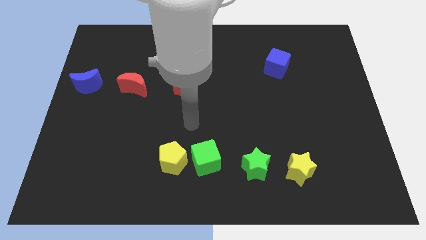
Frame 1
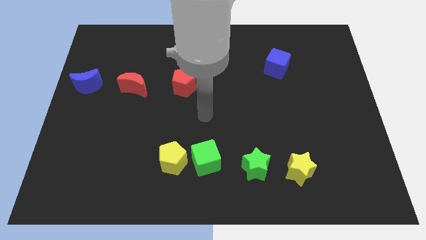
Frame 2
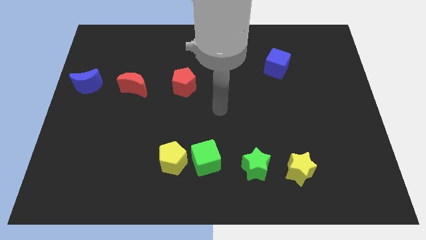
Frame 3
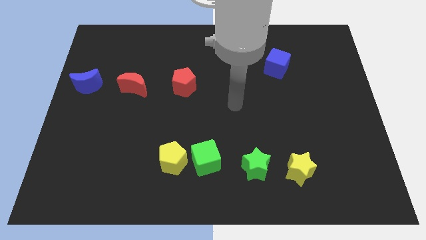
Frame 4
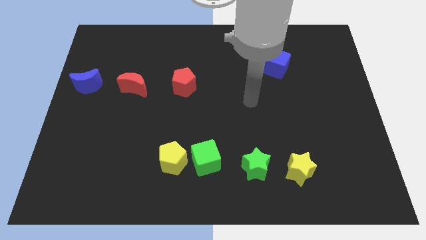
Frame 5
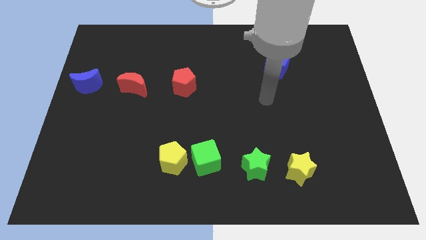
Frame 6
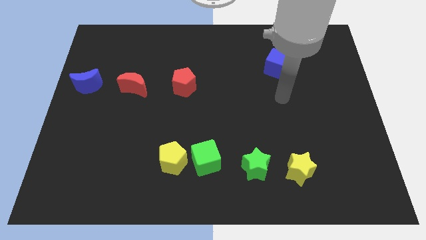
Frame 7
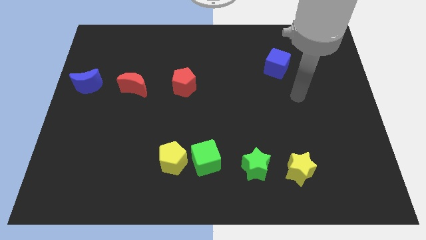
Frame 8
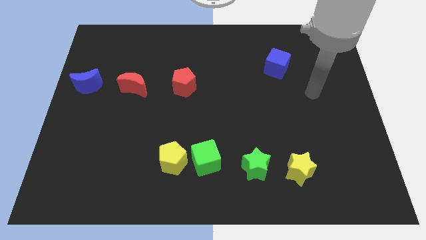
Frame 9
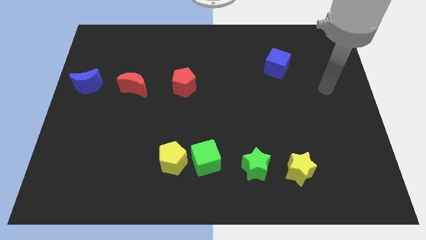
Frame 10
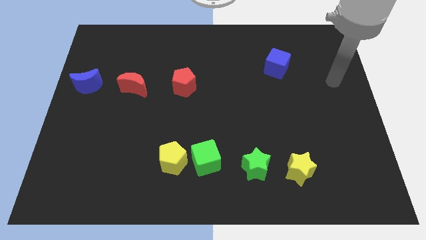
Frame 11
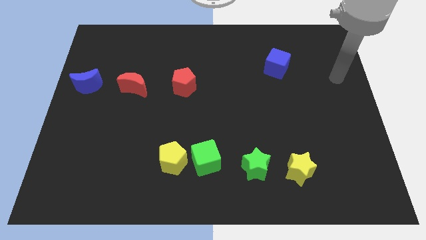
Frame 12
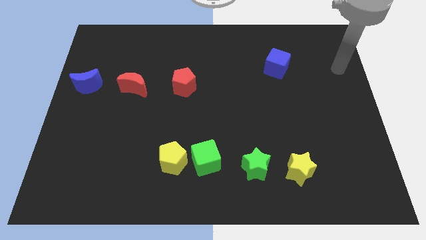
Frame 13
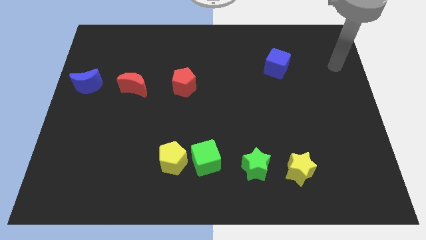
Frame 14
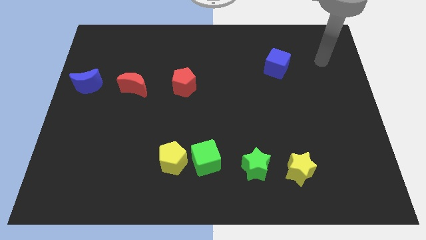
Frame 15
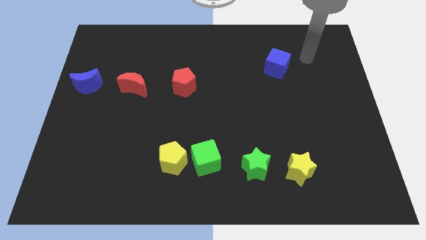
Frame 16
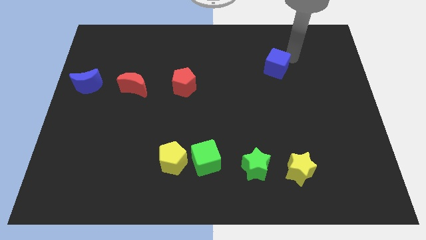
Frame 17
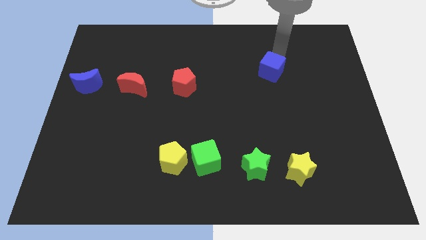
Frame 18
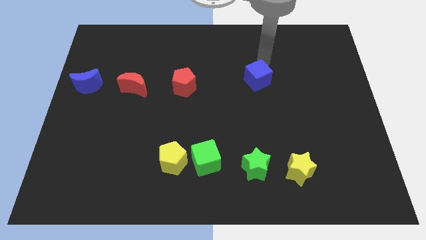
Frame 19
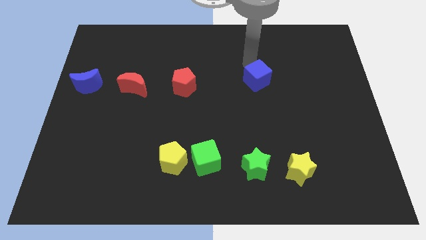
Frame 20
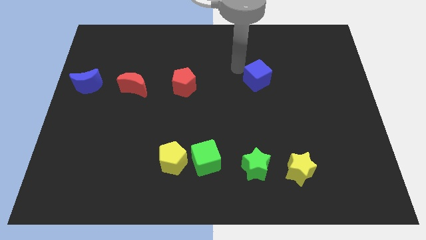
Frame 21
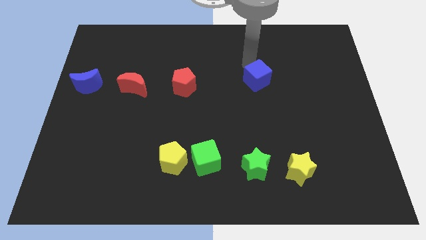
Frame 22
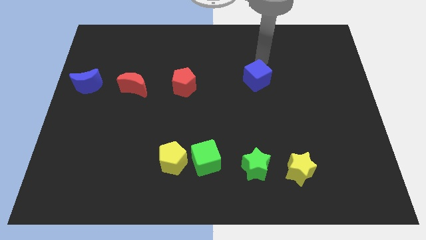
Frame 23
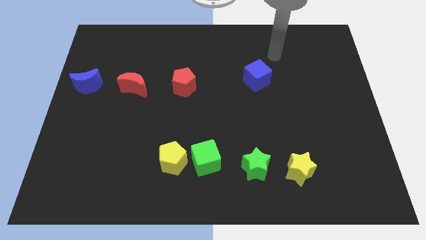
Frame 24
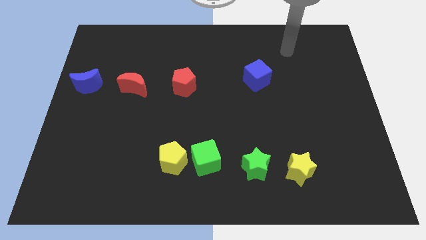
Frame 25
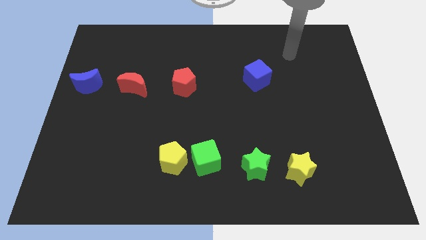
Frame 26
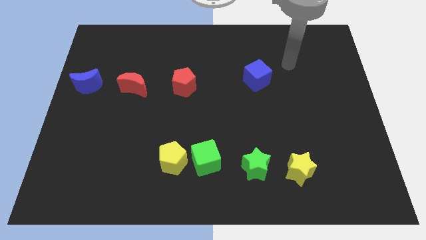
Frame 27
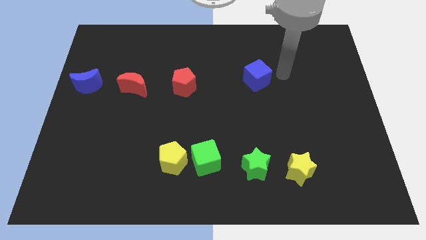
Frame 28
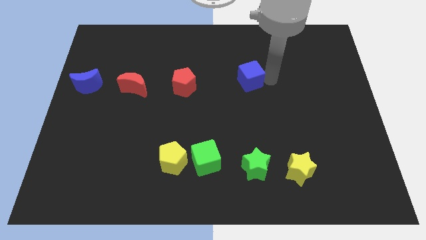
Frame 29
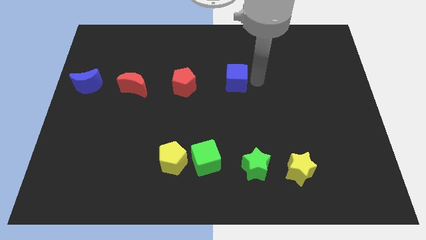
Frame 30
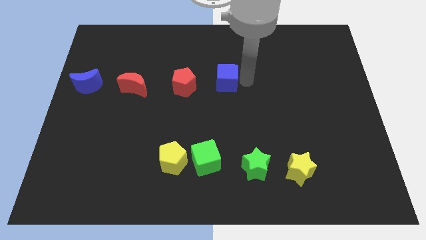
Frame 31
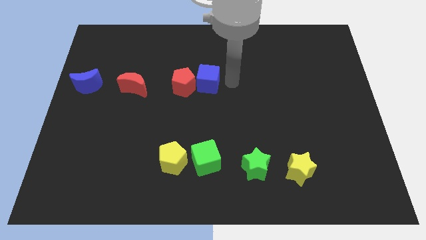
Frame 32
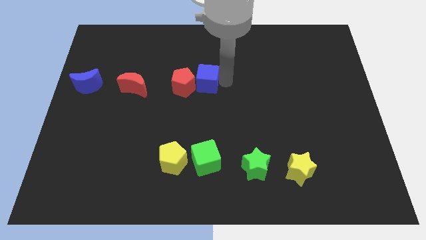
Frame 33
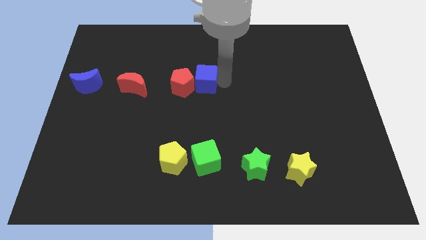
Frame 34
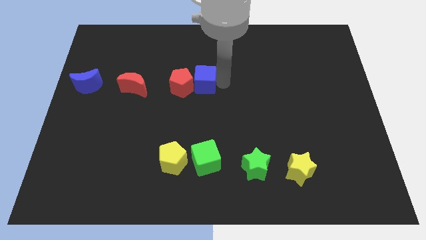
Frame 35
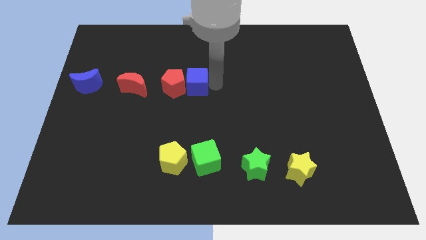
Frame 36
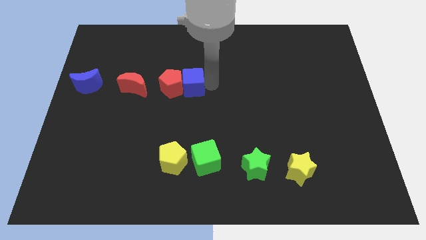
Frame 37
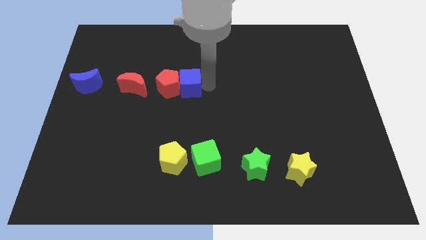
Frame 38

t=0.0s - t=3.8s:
push the blue cube to the right of the red pentagon

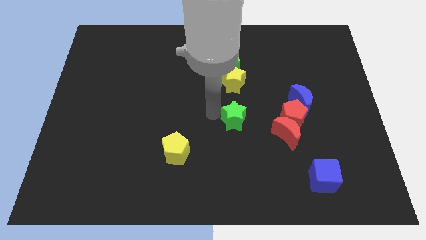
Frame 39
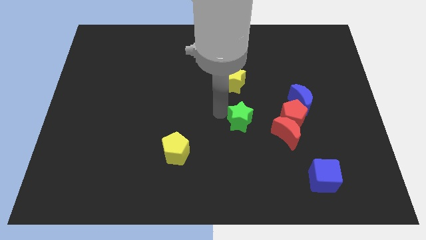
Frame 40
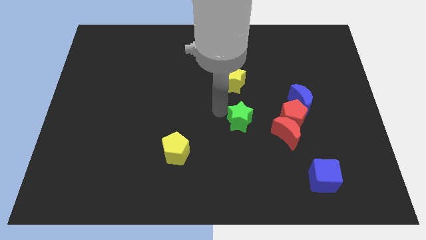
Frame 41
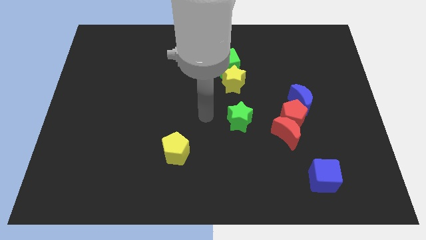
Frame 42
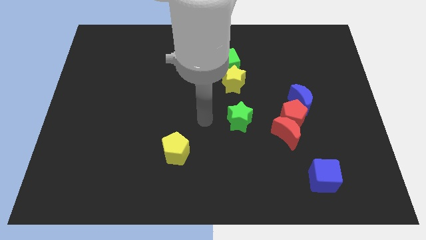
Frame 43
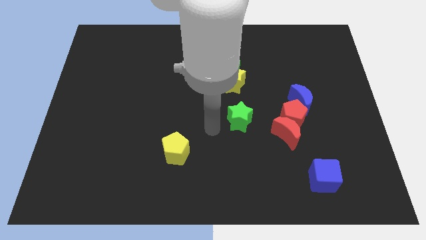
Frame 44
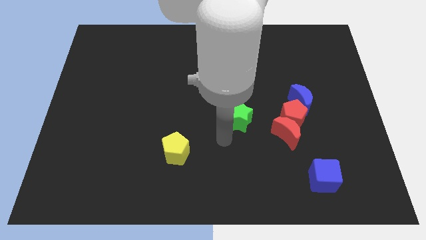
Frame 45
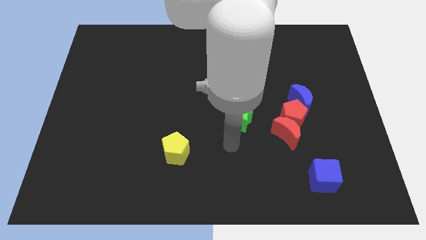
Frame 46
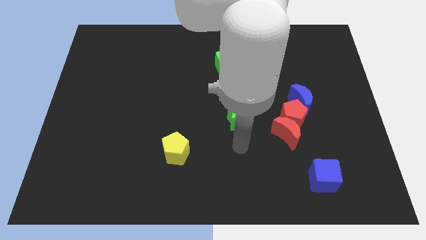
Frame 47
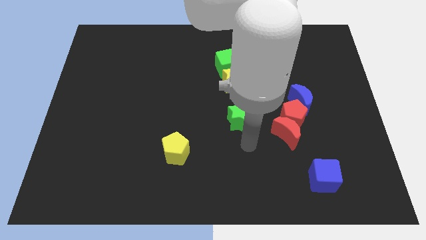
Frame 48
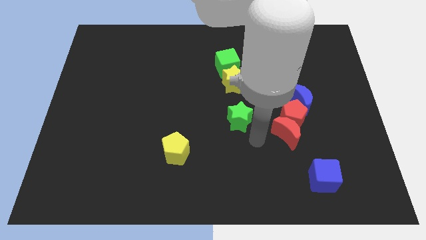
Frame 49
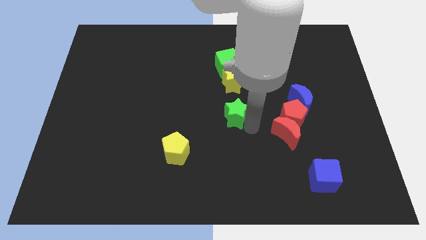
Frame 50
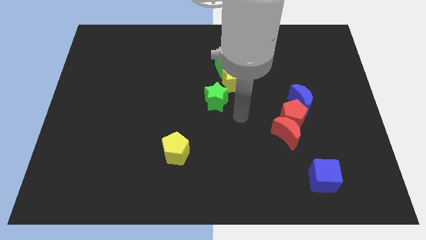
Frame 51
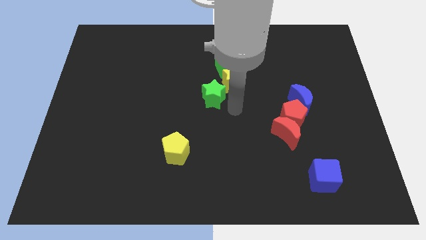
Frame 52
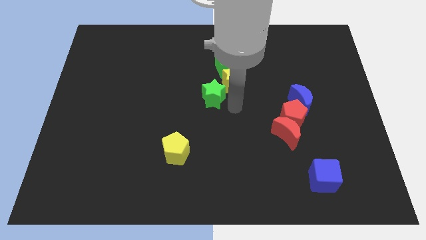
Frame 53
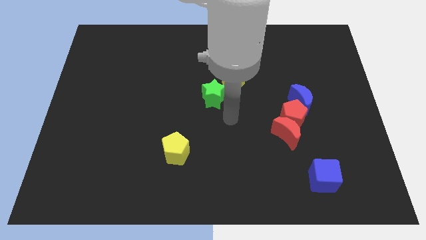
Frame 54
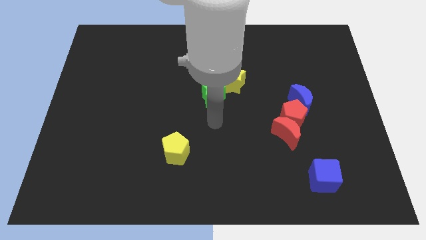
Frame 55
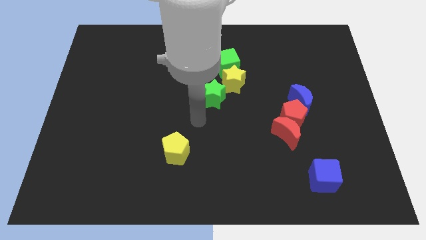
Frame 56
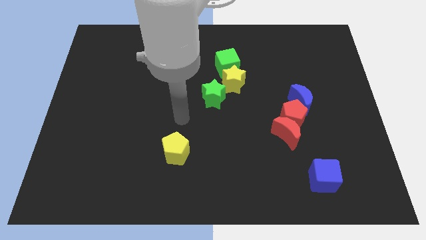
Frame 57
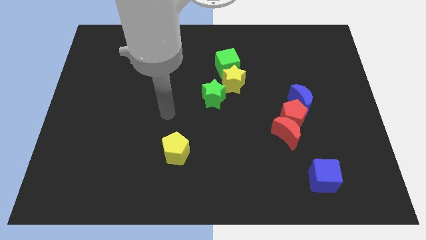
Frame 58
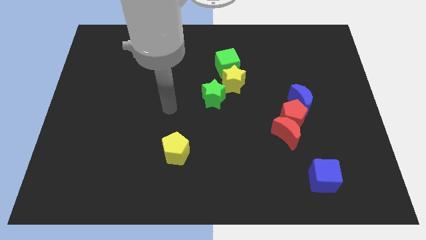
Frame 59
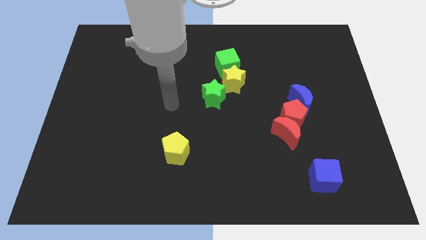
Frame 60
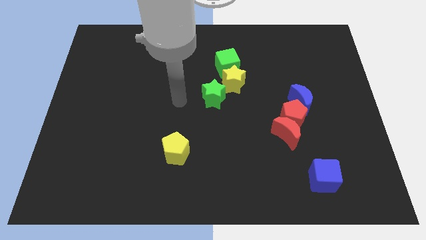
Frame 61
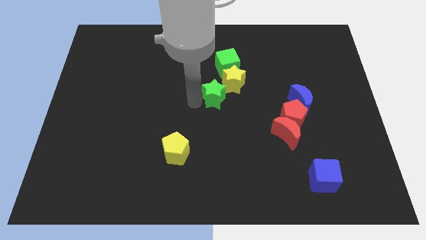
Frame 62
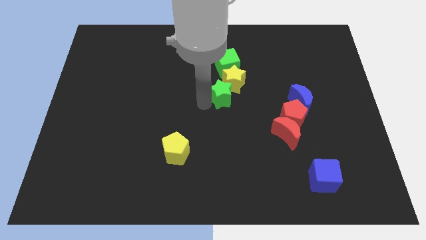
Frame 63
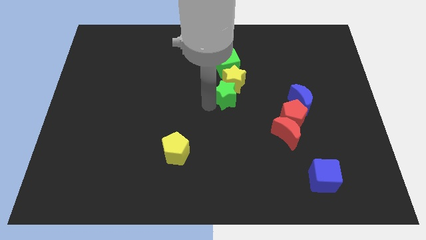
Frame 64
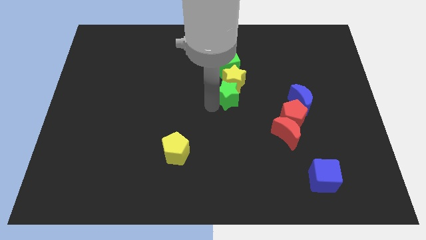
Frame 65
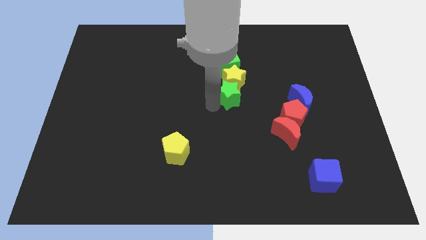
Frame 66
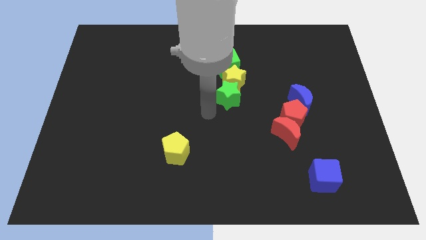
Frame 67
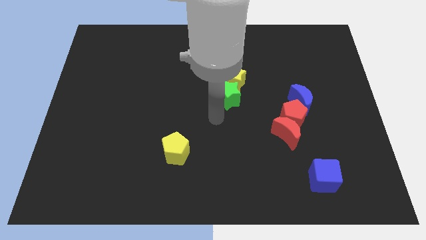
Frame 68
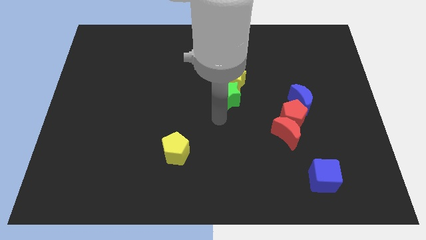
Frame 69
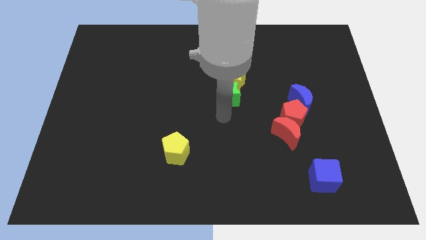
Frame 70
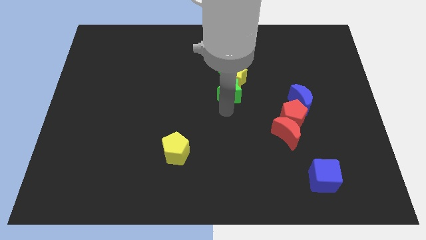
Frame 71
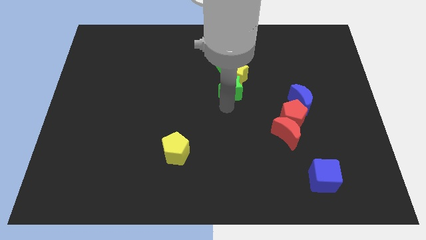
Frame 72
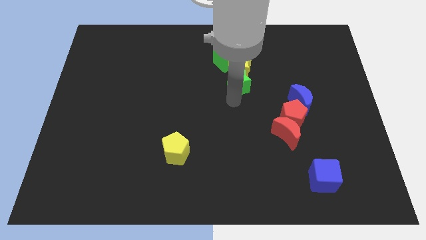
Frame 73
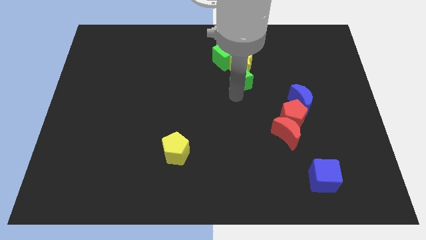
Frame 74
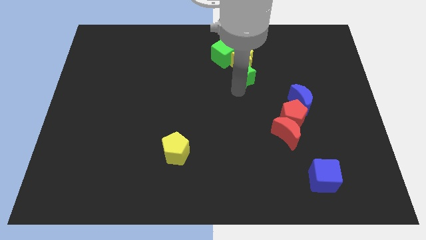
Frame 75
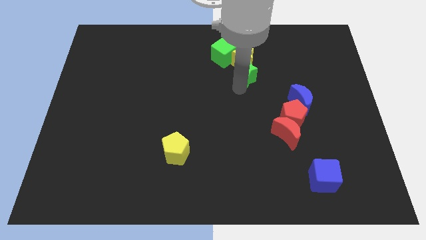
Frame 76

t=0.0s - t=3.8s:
move the green star into the yellow star

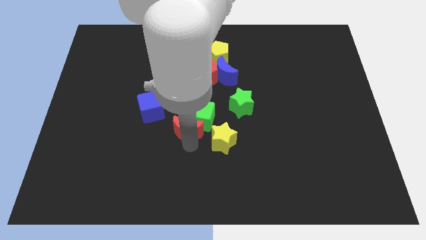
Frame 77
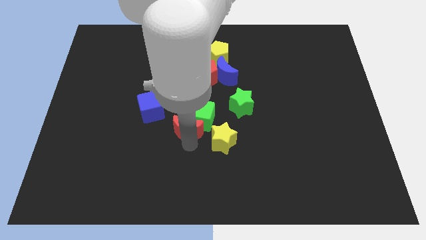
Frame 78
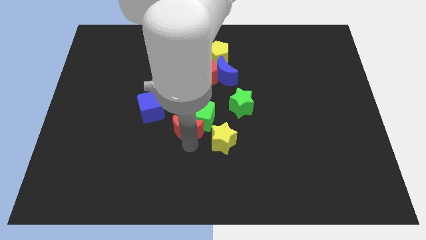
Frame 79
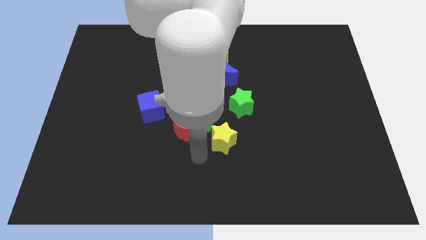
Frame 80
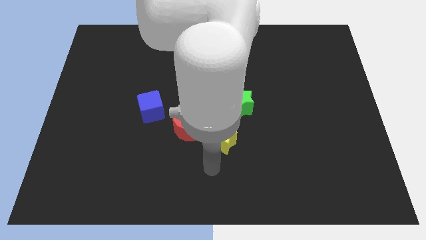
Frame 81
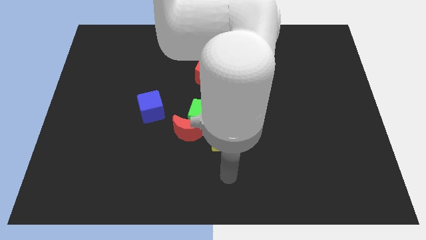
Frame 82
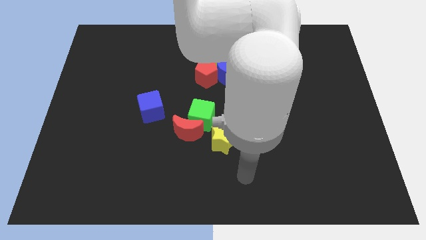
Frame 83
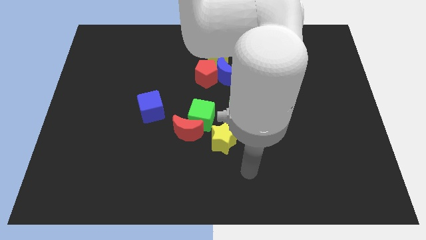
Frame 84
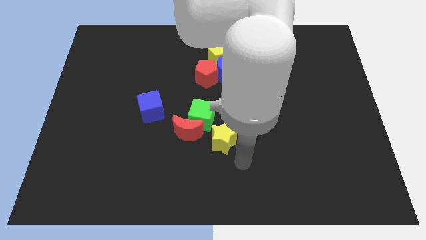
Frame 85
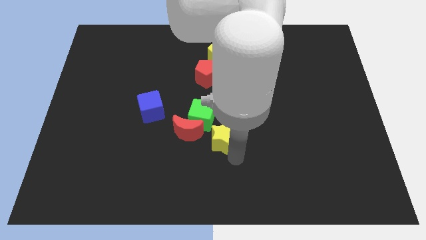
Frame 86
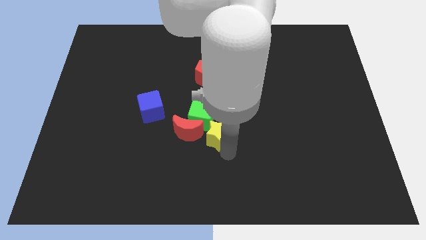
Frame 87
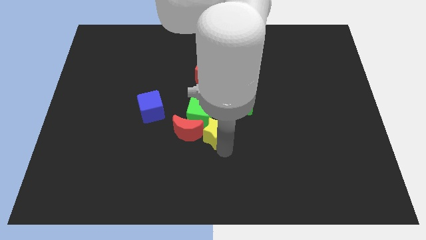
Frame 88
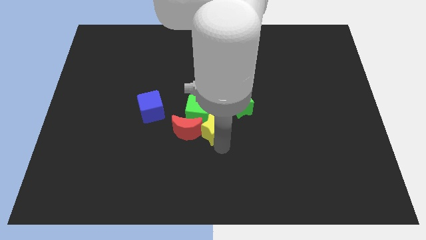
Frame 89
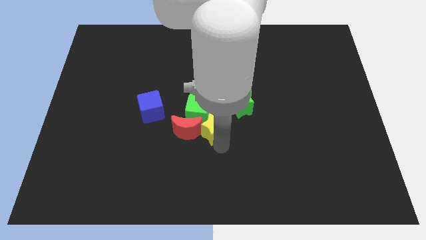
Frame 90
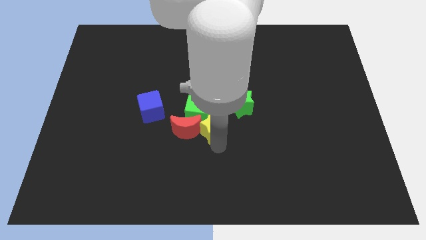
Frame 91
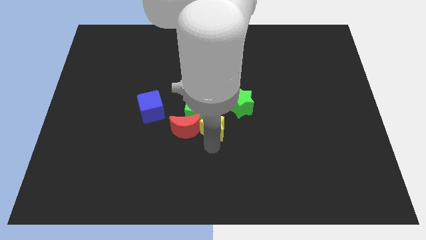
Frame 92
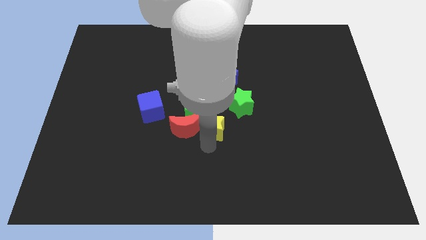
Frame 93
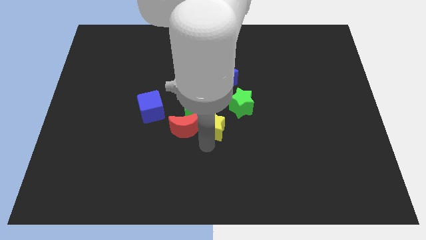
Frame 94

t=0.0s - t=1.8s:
push yellow star into green cube towards the center
